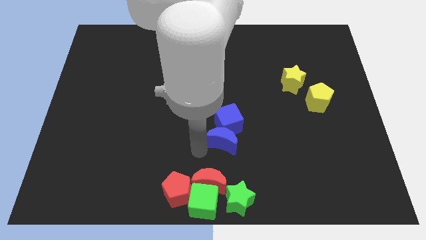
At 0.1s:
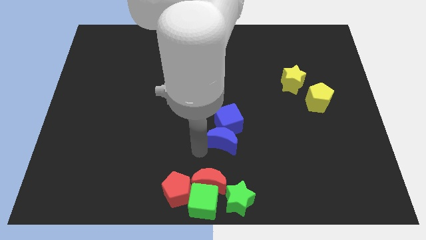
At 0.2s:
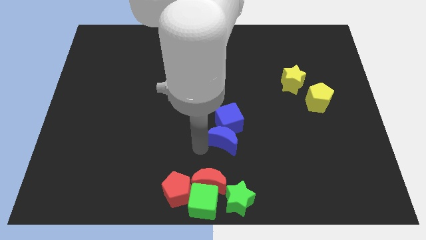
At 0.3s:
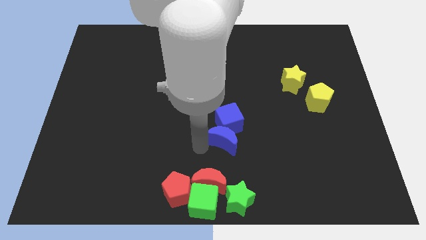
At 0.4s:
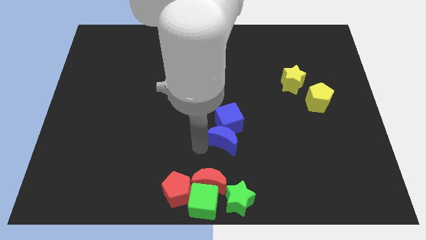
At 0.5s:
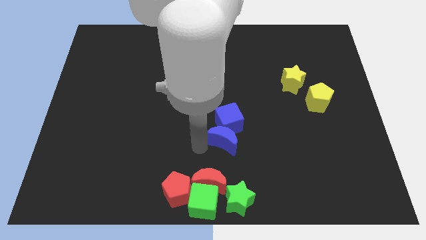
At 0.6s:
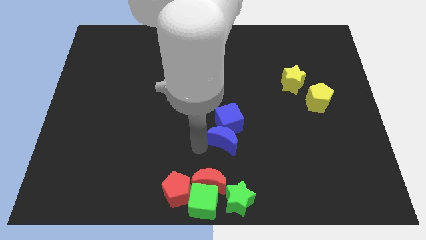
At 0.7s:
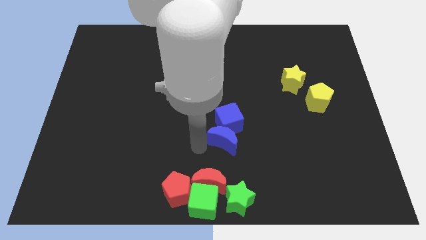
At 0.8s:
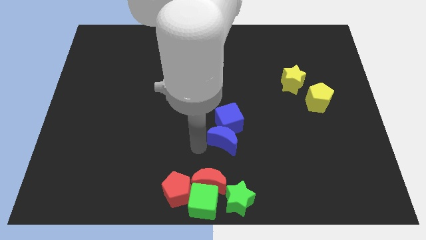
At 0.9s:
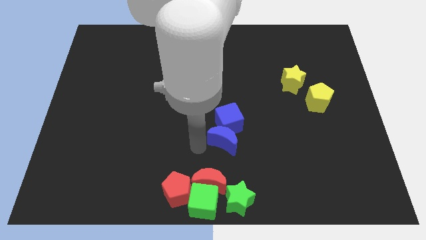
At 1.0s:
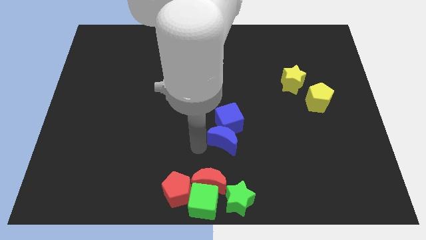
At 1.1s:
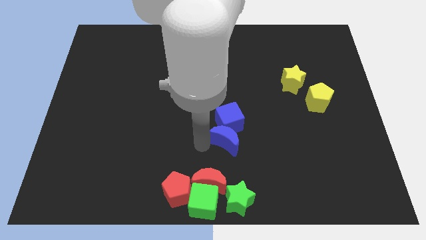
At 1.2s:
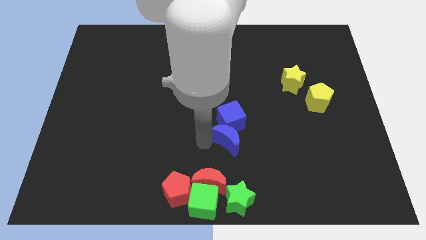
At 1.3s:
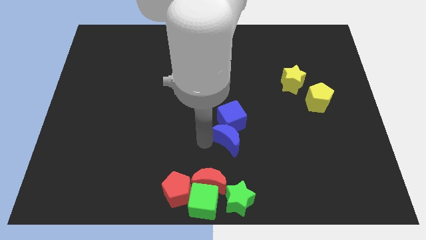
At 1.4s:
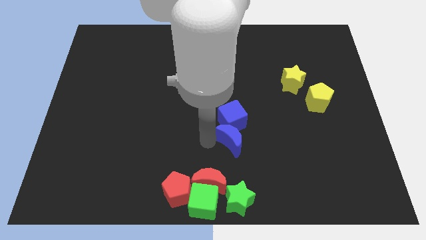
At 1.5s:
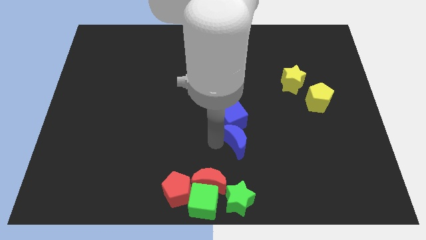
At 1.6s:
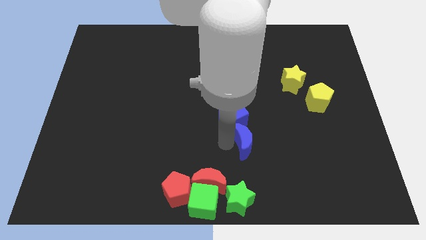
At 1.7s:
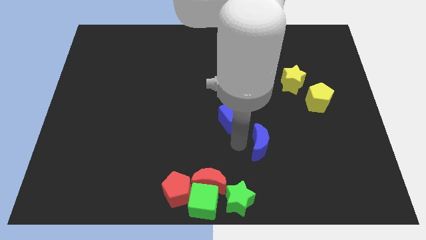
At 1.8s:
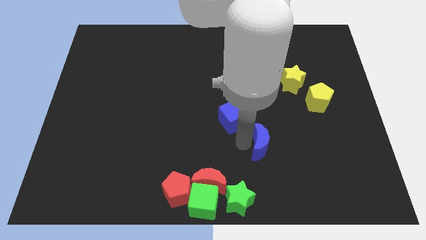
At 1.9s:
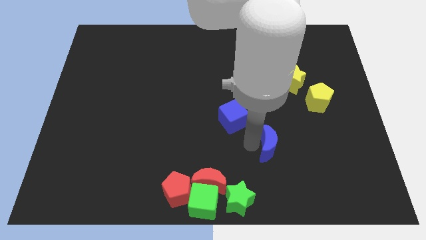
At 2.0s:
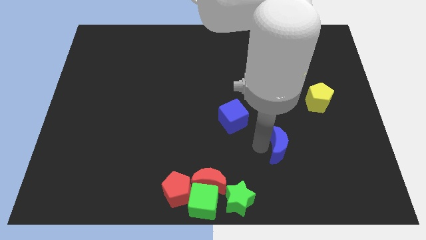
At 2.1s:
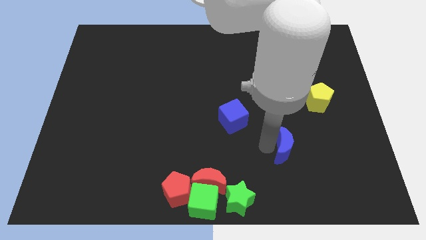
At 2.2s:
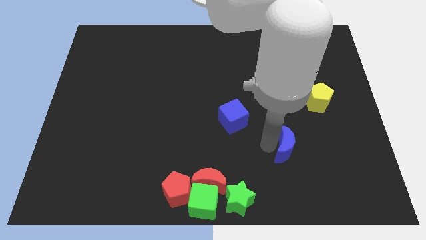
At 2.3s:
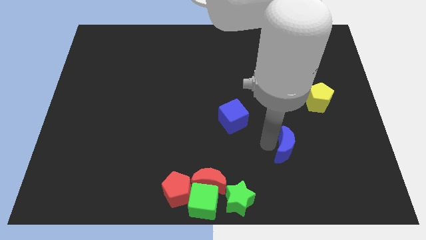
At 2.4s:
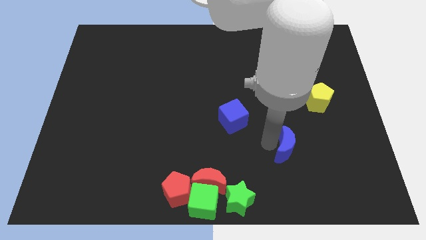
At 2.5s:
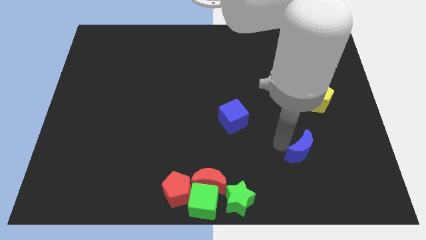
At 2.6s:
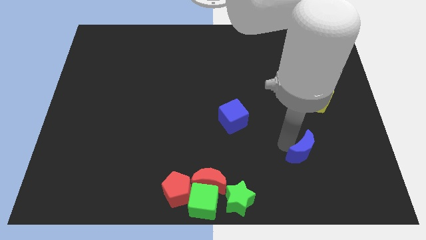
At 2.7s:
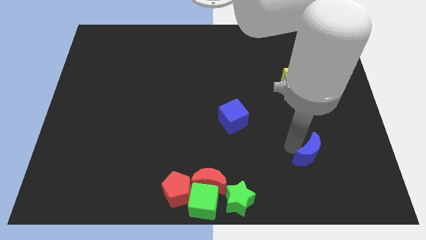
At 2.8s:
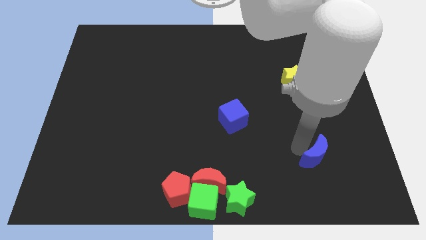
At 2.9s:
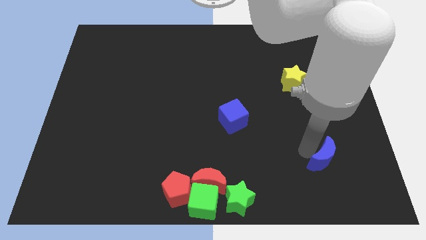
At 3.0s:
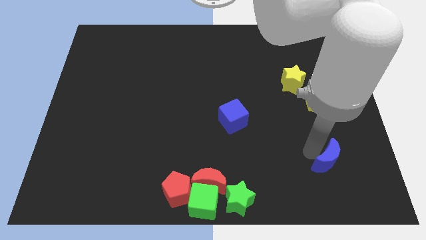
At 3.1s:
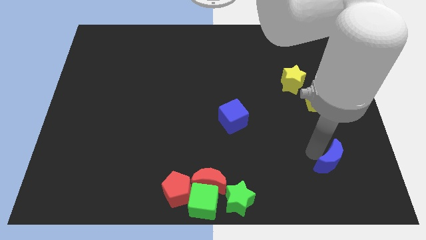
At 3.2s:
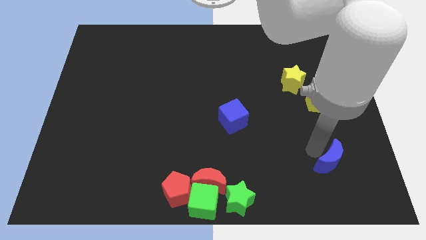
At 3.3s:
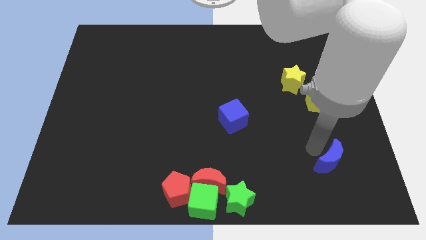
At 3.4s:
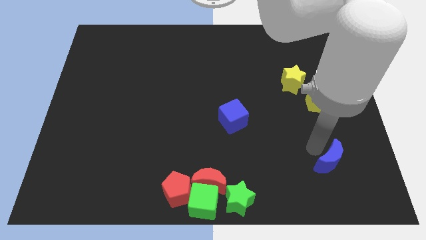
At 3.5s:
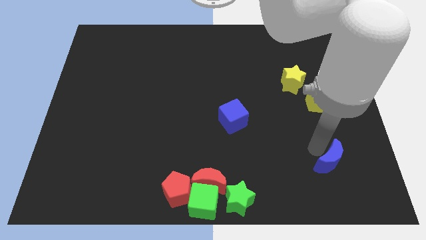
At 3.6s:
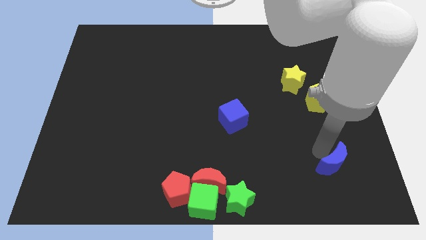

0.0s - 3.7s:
place the blue moon to the bottom right side of the board

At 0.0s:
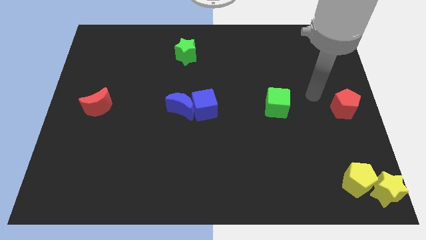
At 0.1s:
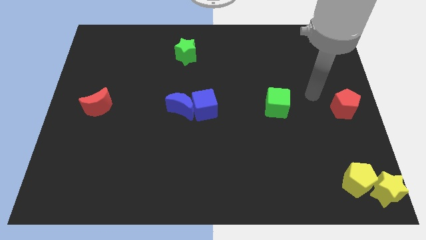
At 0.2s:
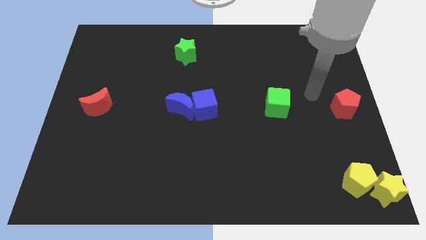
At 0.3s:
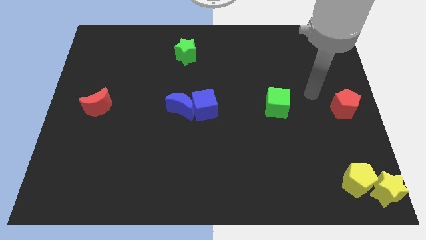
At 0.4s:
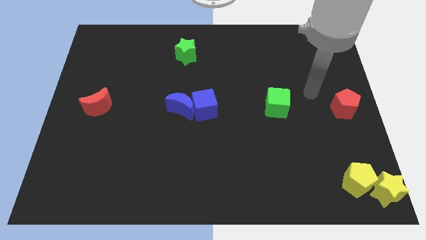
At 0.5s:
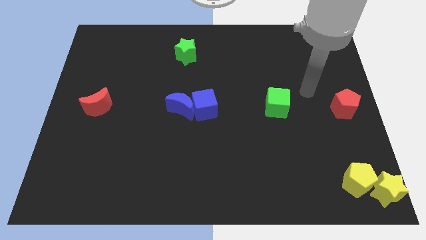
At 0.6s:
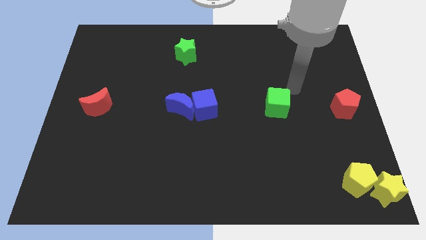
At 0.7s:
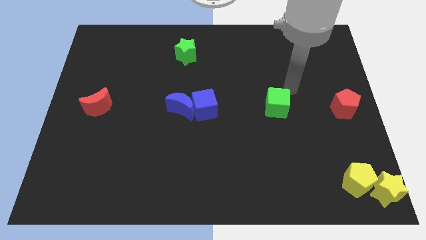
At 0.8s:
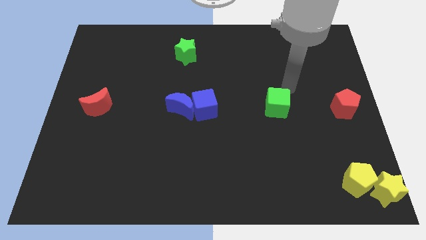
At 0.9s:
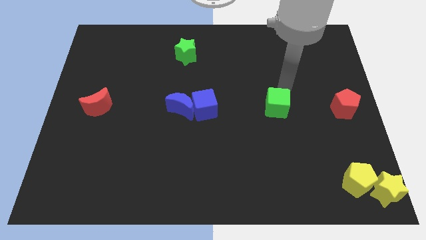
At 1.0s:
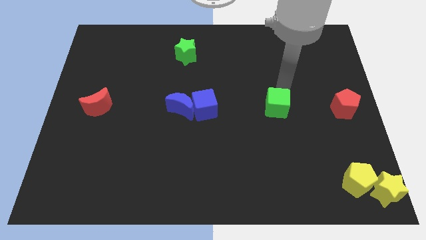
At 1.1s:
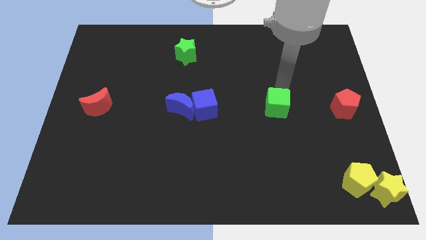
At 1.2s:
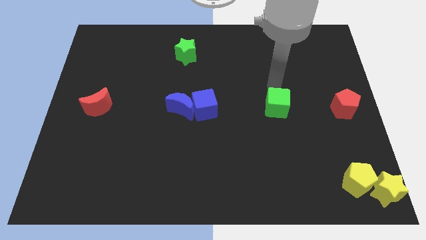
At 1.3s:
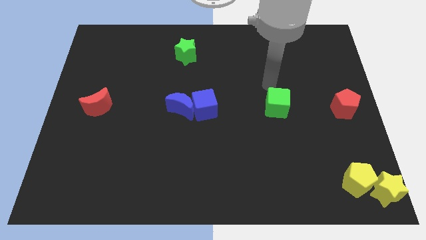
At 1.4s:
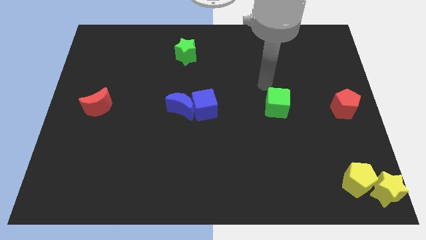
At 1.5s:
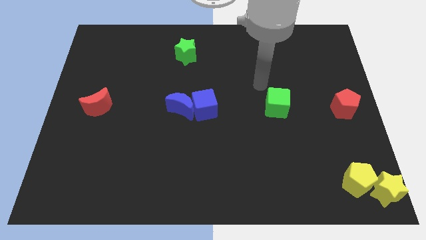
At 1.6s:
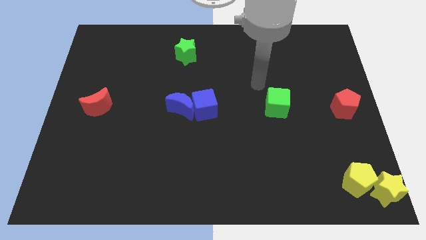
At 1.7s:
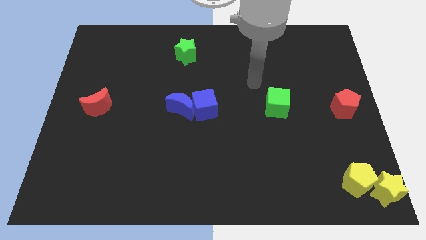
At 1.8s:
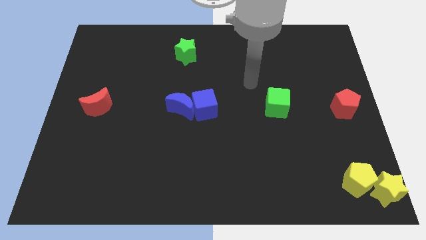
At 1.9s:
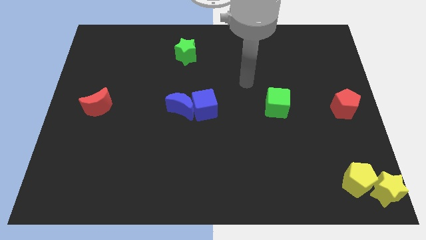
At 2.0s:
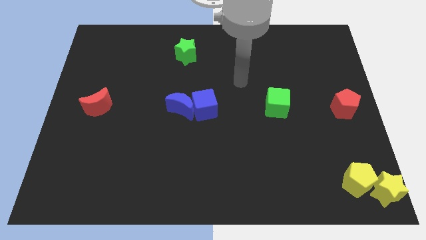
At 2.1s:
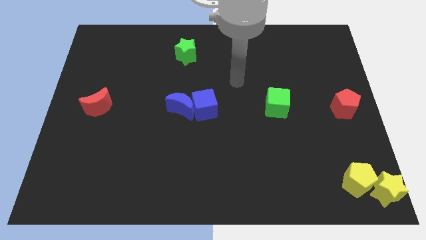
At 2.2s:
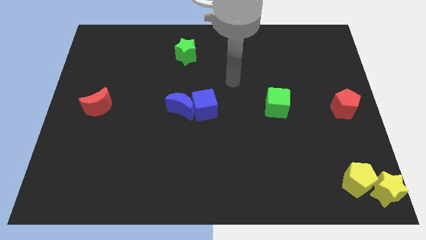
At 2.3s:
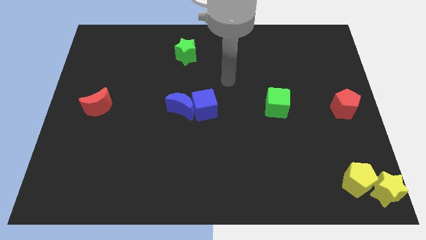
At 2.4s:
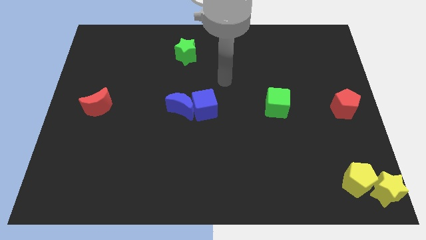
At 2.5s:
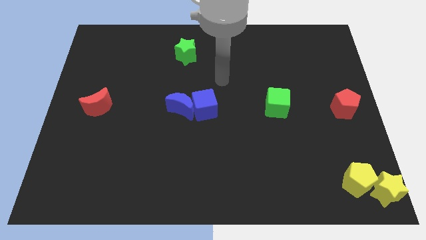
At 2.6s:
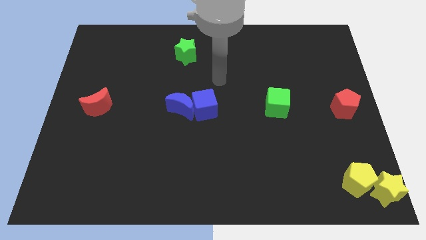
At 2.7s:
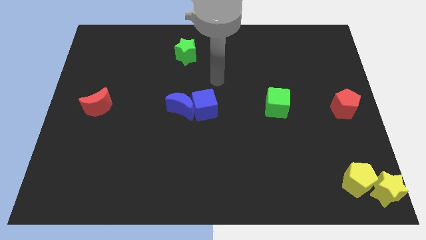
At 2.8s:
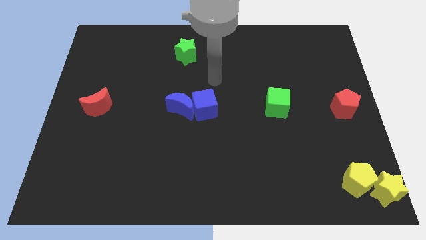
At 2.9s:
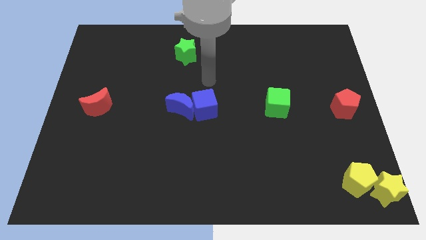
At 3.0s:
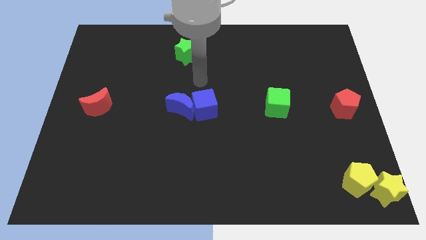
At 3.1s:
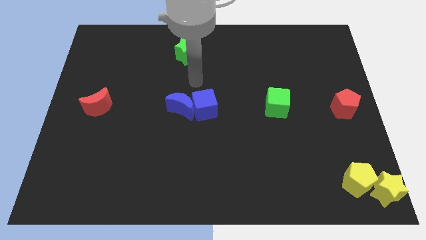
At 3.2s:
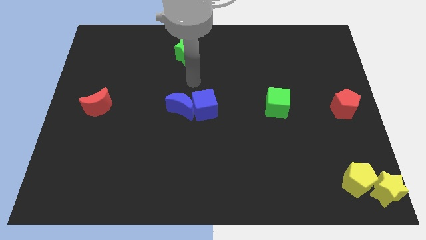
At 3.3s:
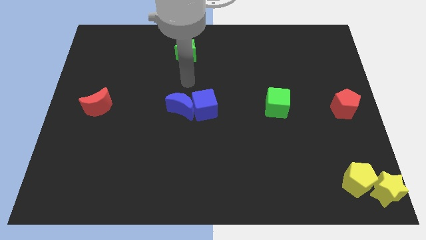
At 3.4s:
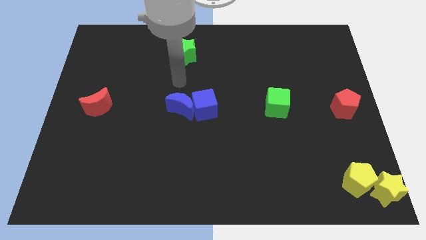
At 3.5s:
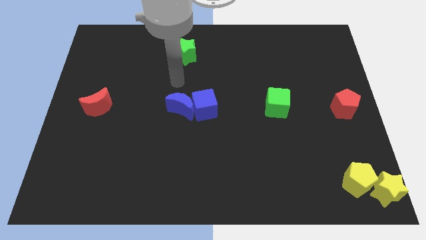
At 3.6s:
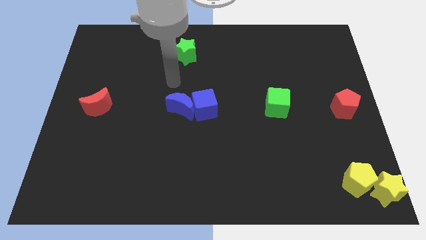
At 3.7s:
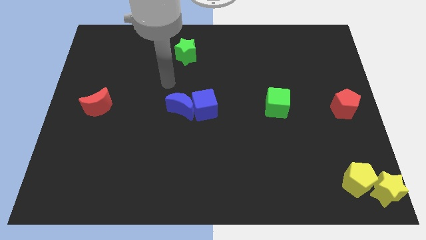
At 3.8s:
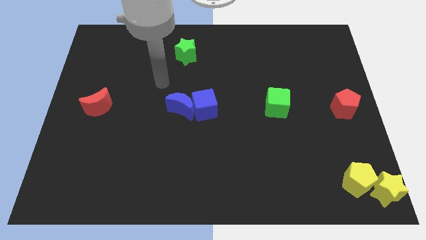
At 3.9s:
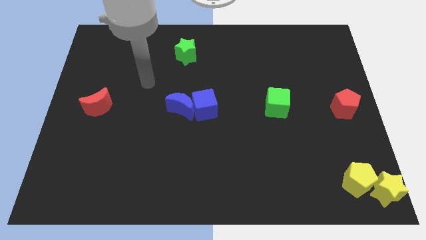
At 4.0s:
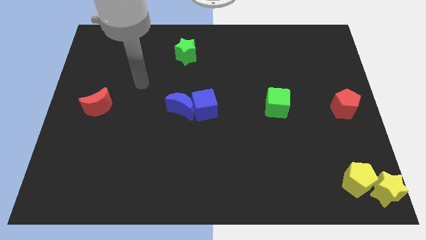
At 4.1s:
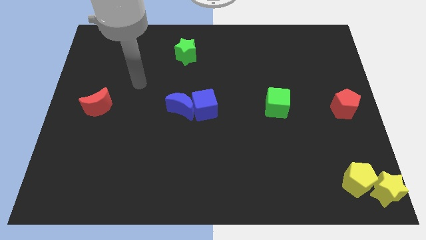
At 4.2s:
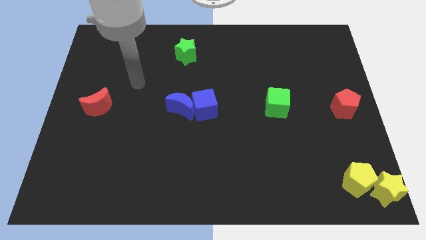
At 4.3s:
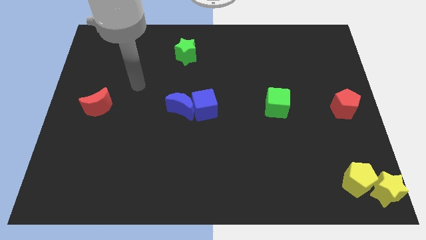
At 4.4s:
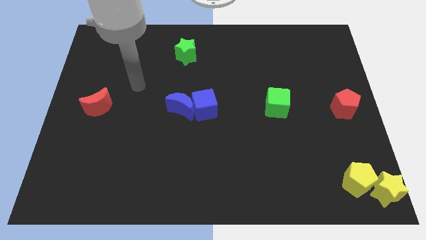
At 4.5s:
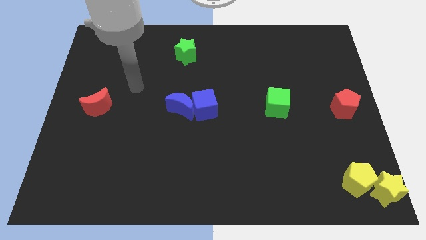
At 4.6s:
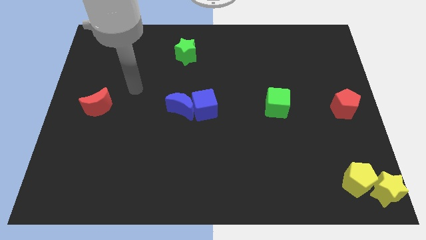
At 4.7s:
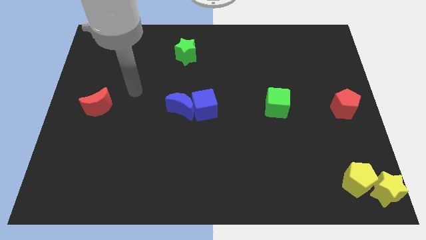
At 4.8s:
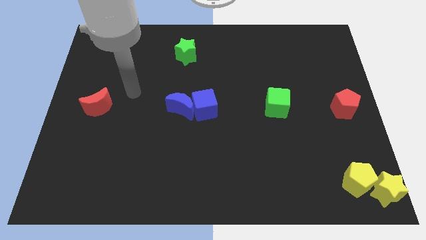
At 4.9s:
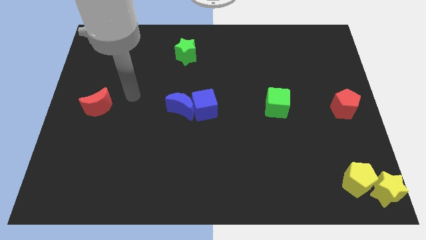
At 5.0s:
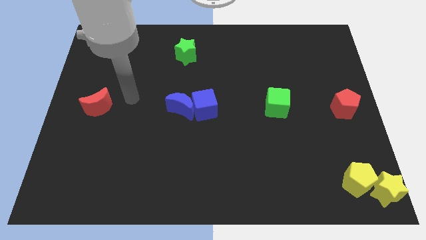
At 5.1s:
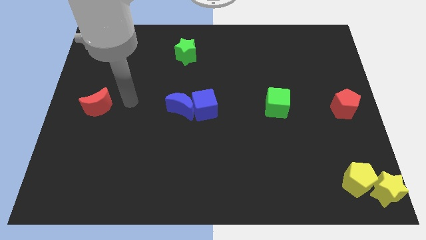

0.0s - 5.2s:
point the arm in between the red crescent and the blue moon

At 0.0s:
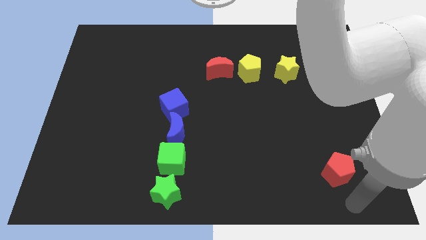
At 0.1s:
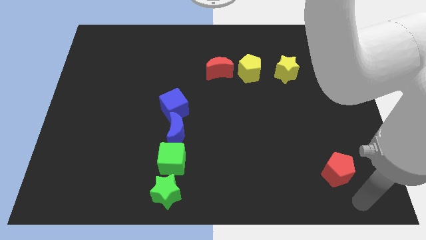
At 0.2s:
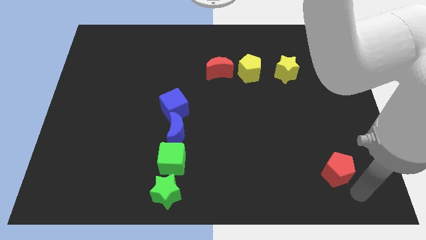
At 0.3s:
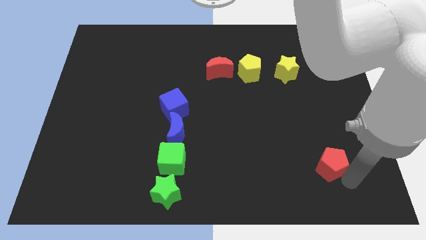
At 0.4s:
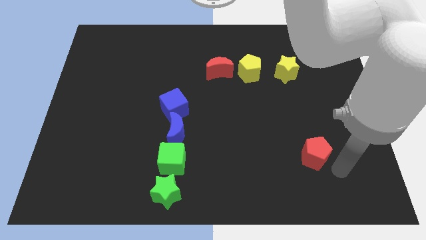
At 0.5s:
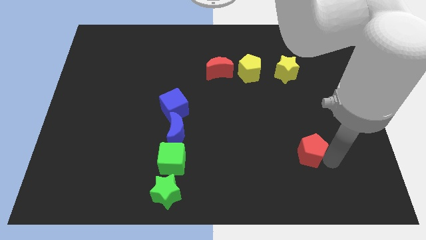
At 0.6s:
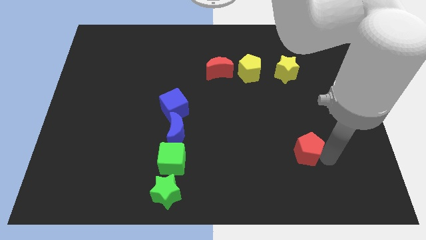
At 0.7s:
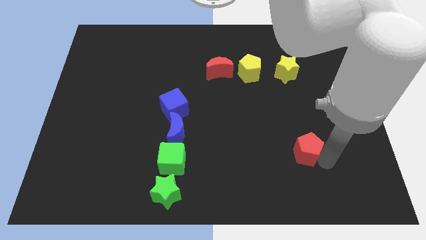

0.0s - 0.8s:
move the red pentagon to the top of the board
